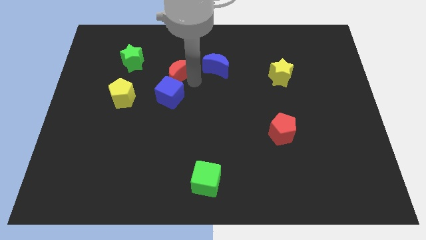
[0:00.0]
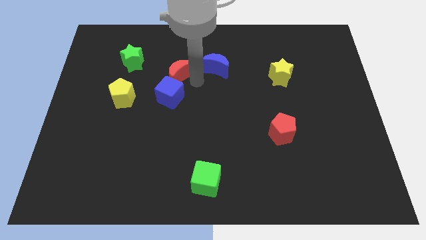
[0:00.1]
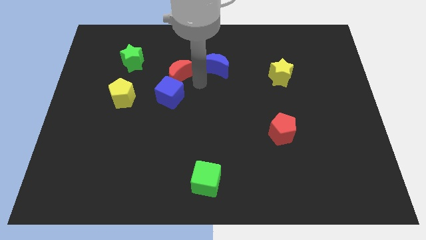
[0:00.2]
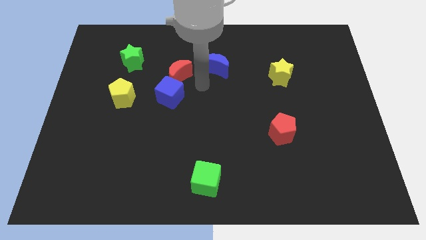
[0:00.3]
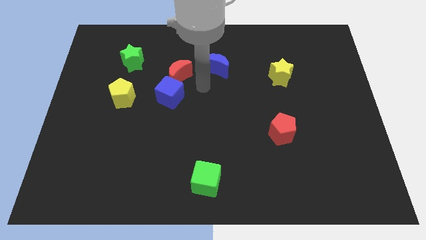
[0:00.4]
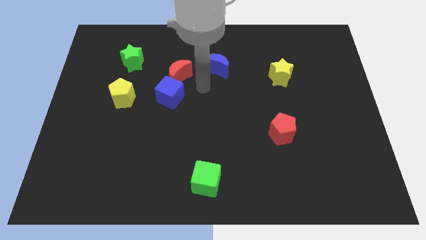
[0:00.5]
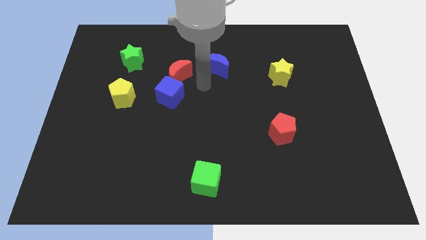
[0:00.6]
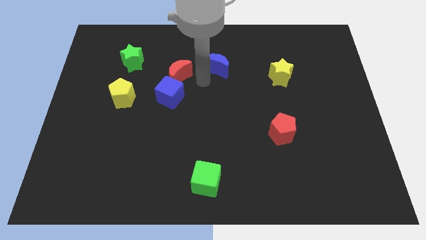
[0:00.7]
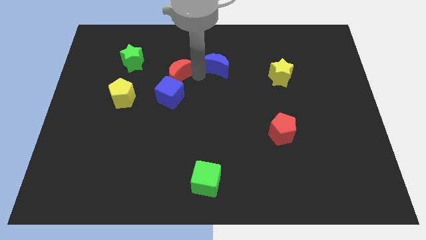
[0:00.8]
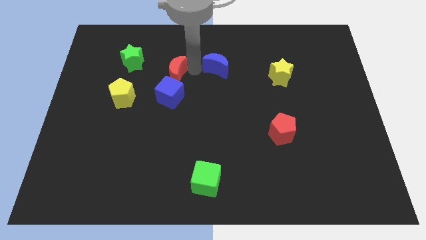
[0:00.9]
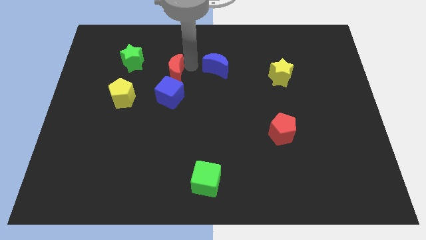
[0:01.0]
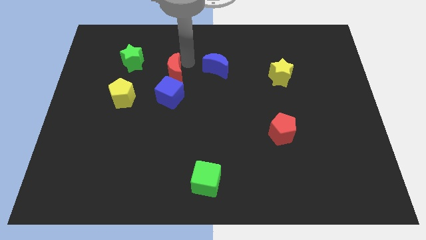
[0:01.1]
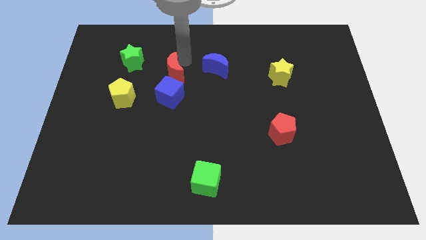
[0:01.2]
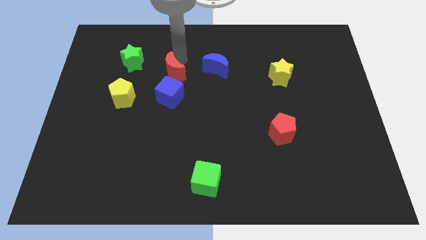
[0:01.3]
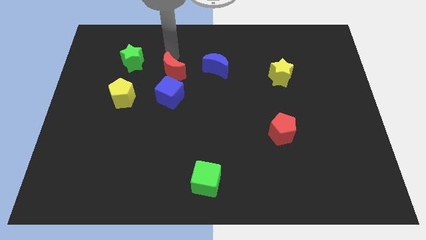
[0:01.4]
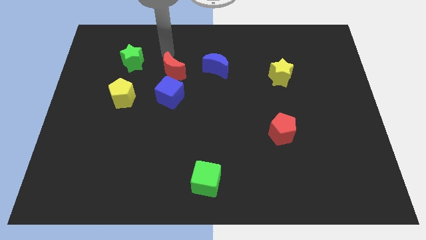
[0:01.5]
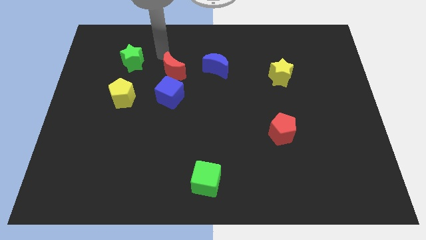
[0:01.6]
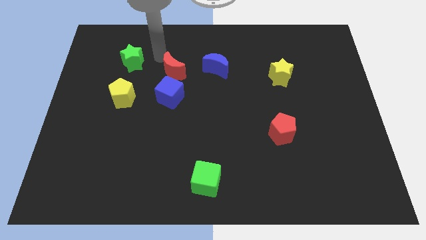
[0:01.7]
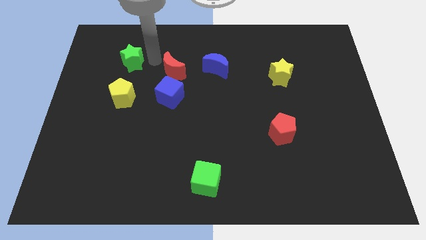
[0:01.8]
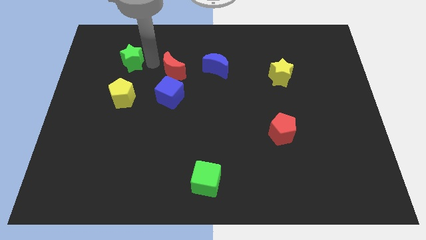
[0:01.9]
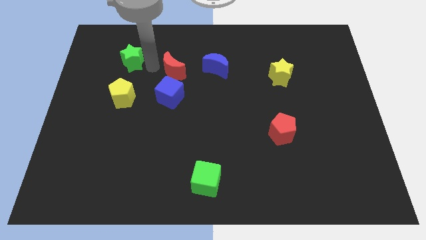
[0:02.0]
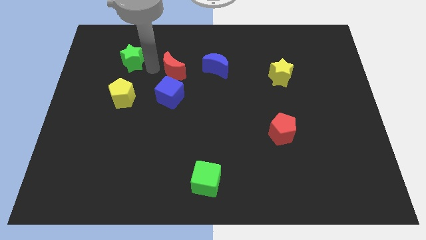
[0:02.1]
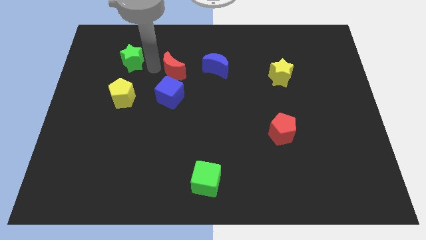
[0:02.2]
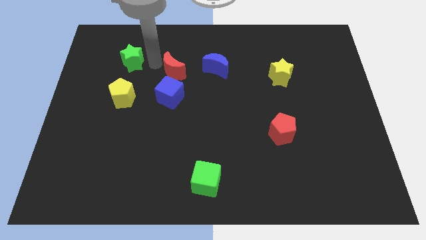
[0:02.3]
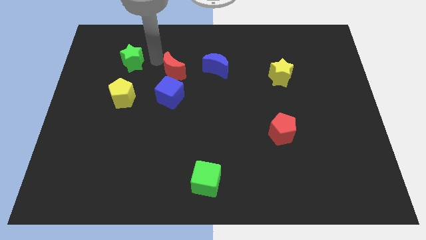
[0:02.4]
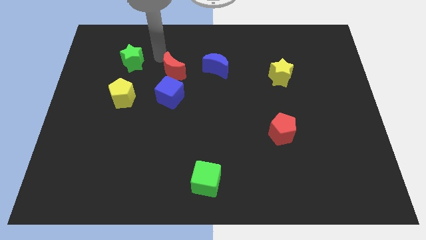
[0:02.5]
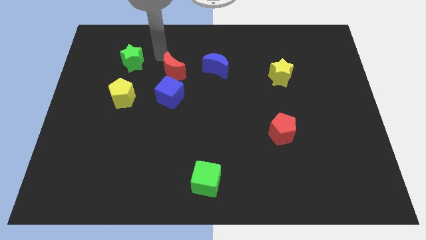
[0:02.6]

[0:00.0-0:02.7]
move the red moon slightly to the top

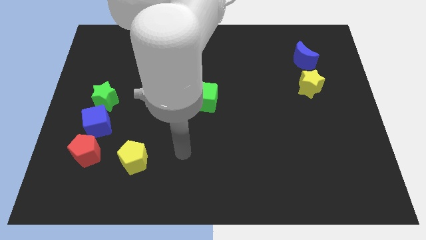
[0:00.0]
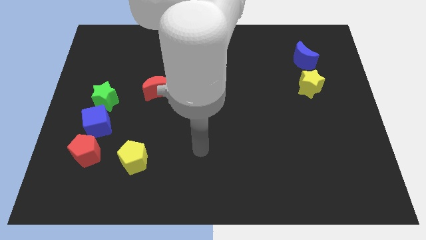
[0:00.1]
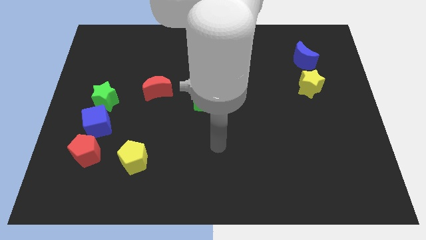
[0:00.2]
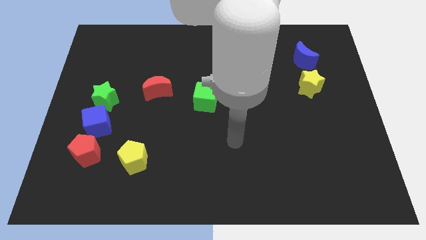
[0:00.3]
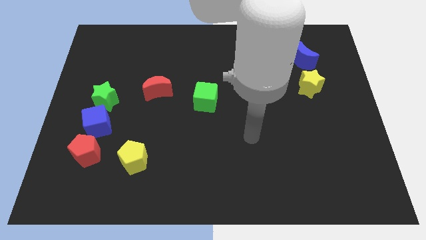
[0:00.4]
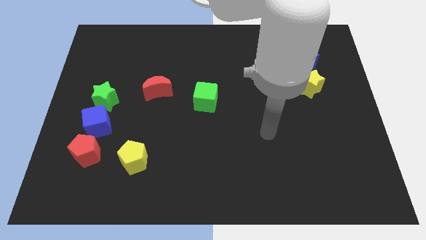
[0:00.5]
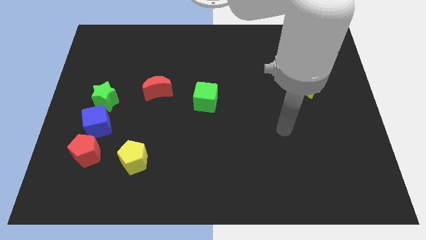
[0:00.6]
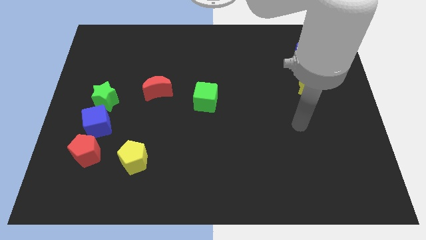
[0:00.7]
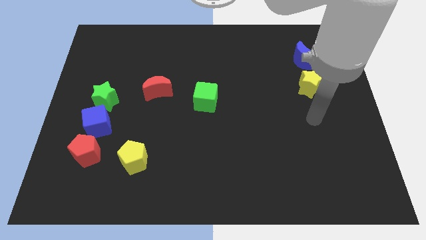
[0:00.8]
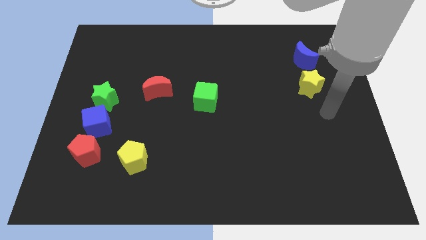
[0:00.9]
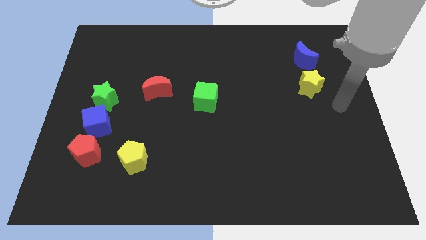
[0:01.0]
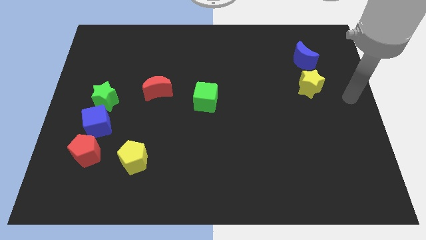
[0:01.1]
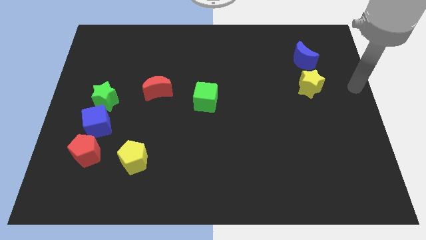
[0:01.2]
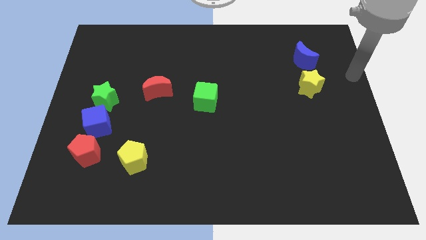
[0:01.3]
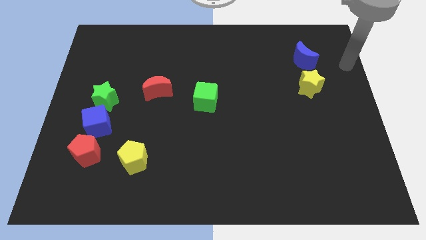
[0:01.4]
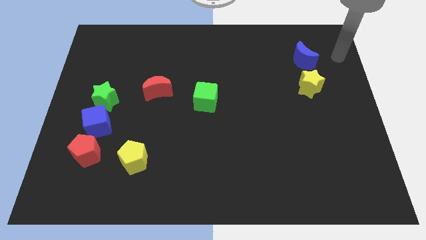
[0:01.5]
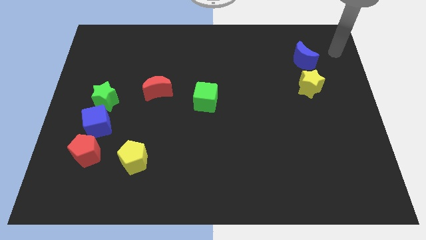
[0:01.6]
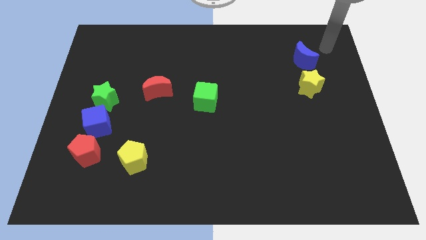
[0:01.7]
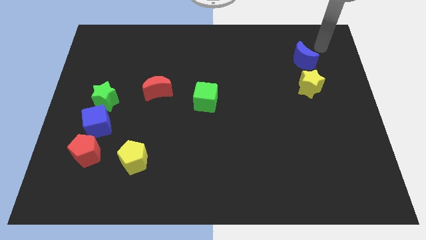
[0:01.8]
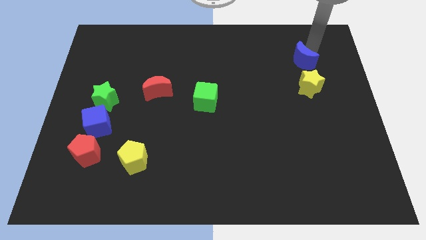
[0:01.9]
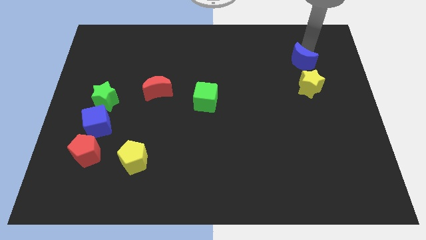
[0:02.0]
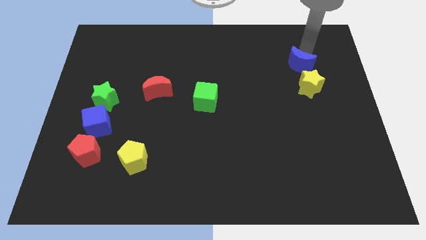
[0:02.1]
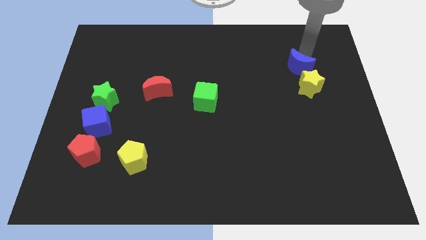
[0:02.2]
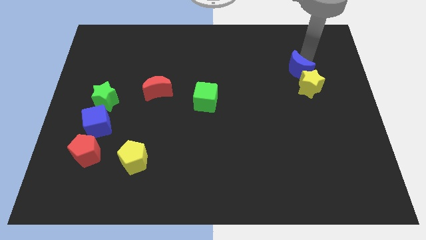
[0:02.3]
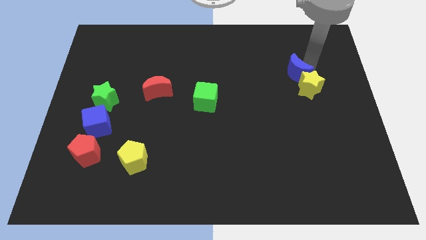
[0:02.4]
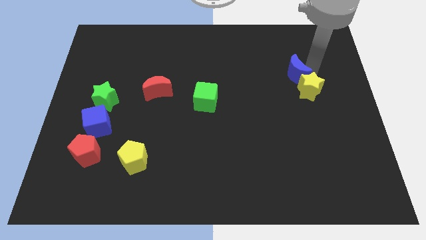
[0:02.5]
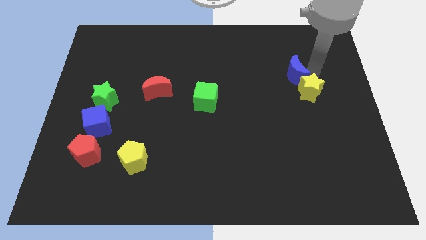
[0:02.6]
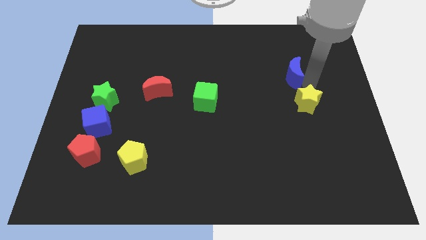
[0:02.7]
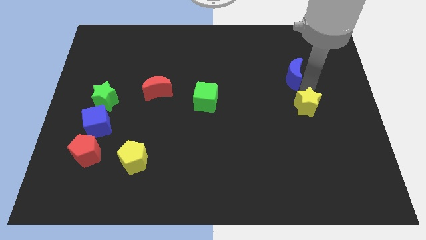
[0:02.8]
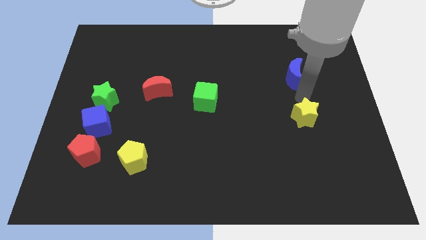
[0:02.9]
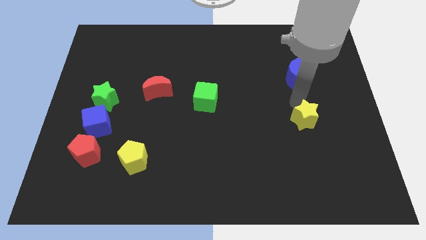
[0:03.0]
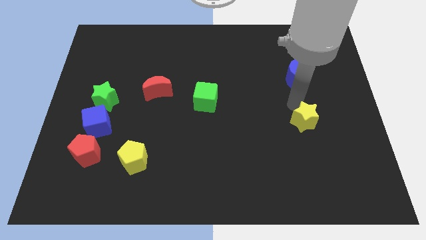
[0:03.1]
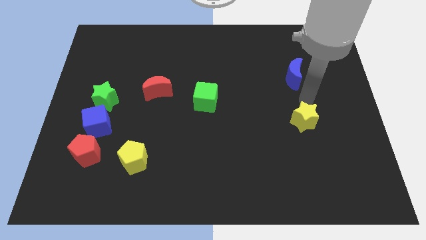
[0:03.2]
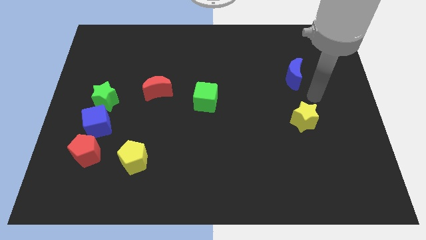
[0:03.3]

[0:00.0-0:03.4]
separate the yellow star and blue moon

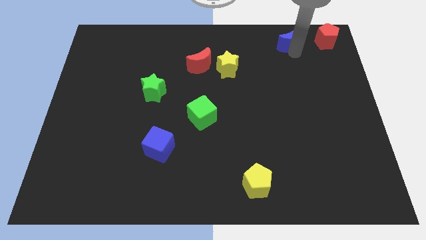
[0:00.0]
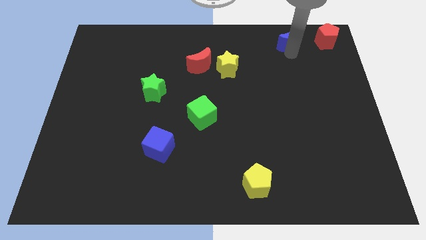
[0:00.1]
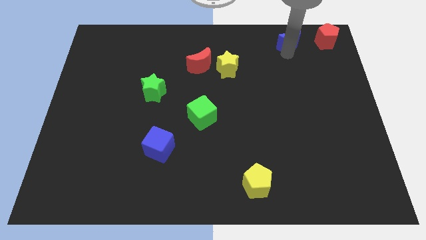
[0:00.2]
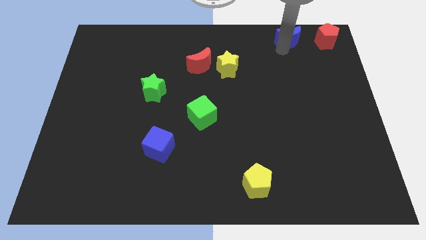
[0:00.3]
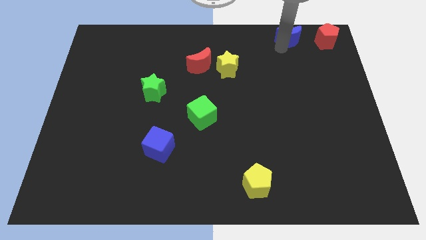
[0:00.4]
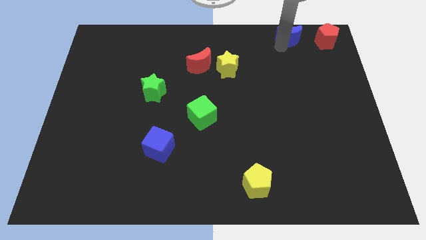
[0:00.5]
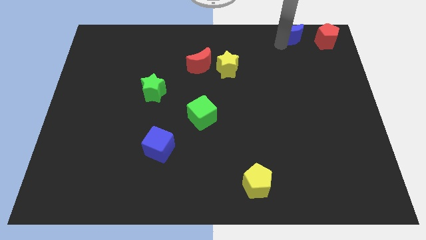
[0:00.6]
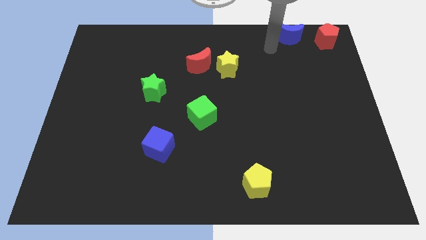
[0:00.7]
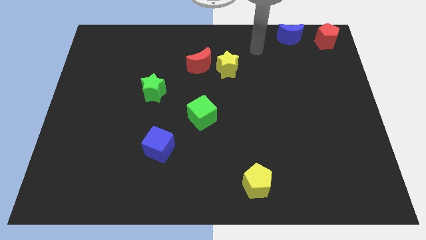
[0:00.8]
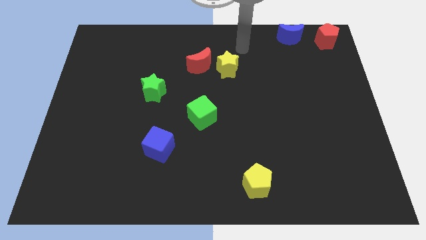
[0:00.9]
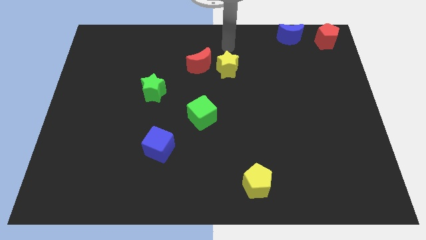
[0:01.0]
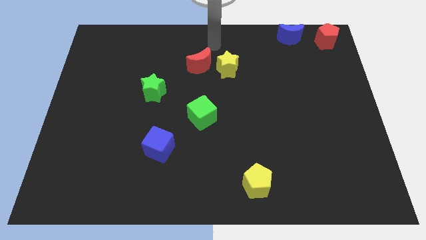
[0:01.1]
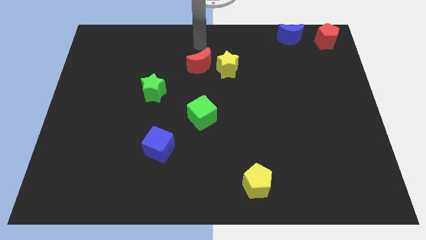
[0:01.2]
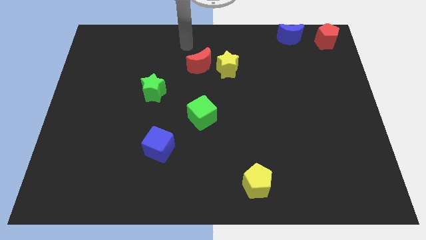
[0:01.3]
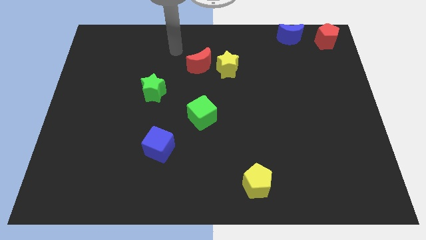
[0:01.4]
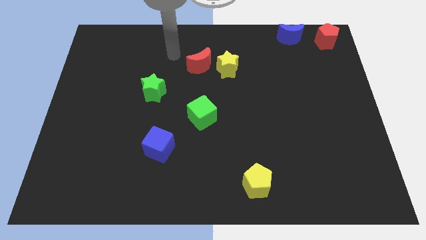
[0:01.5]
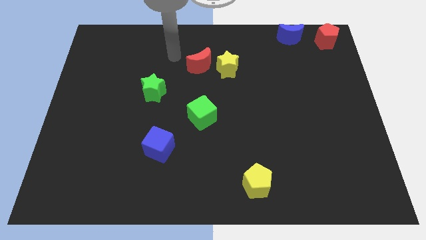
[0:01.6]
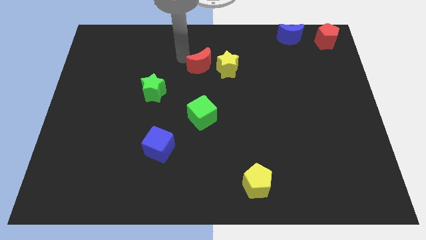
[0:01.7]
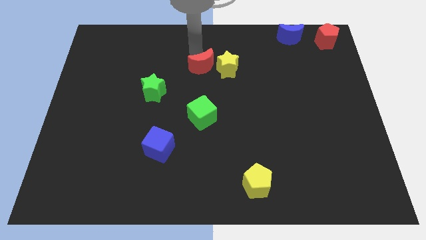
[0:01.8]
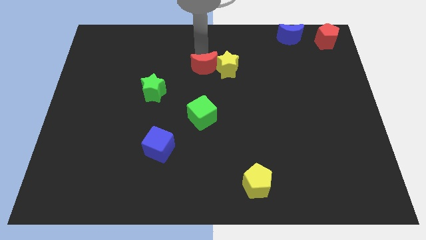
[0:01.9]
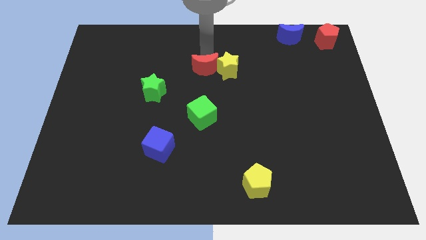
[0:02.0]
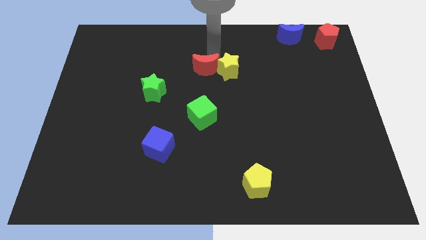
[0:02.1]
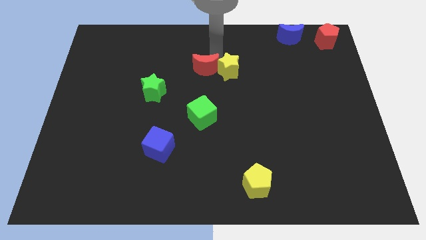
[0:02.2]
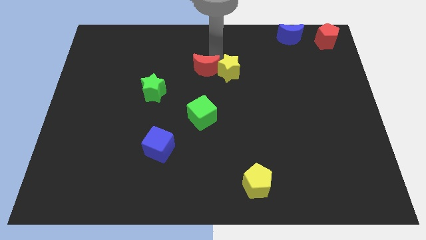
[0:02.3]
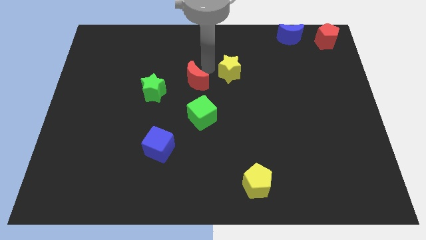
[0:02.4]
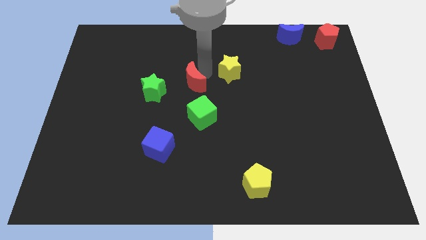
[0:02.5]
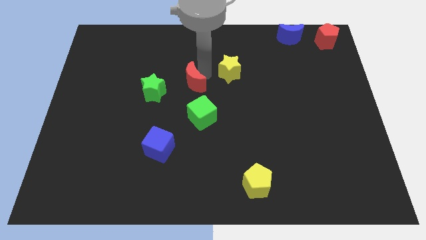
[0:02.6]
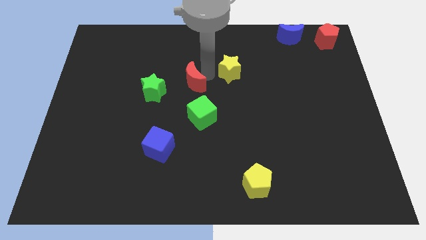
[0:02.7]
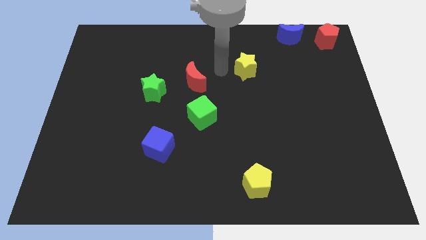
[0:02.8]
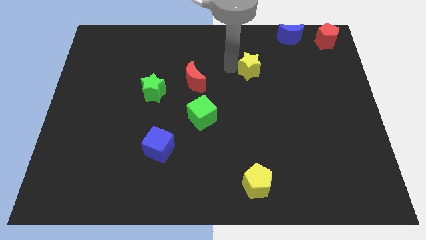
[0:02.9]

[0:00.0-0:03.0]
push yellow star above yellow pentagon
